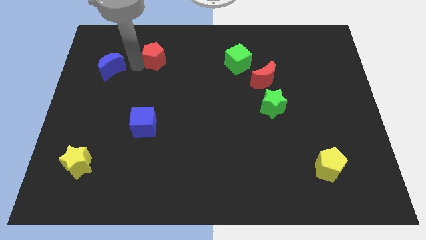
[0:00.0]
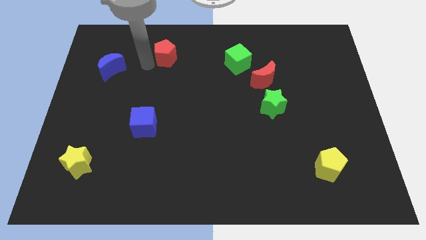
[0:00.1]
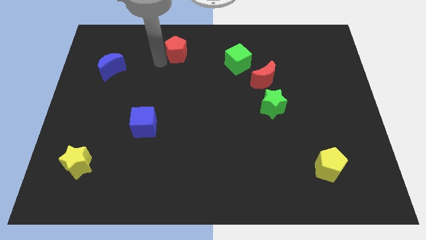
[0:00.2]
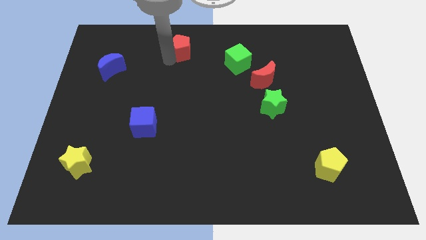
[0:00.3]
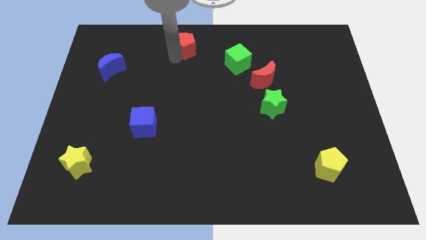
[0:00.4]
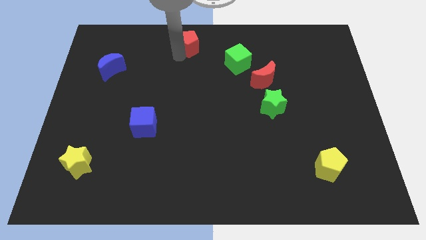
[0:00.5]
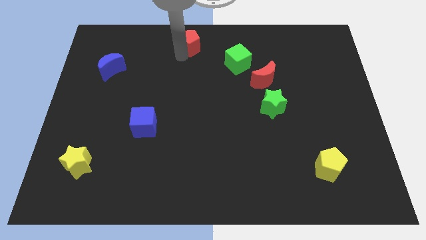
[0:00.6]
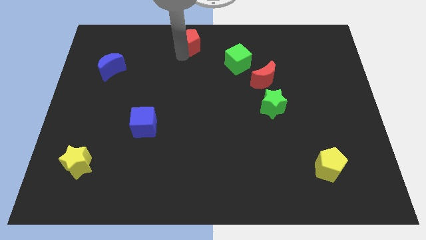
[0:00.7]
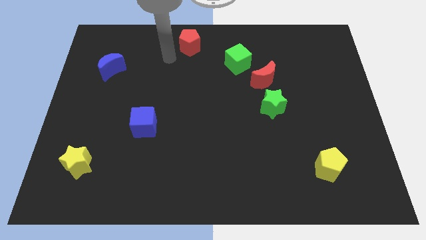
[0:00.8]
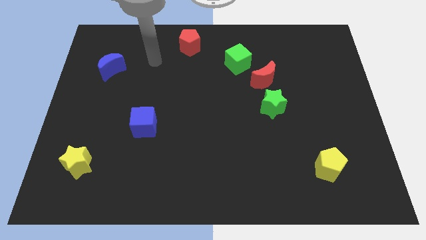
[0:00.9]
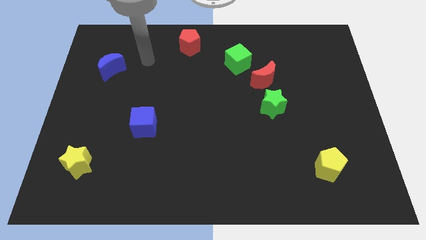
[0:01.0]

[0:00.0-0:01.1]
move the red pentagon to the top center

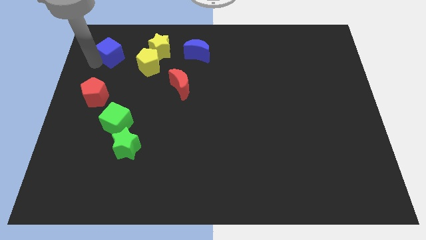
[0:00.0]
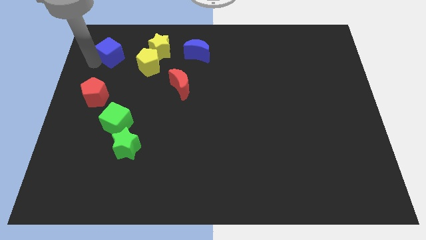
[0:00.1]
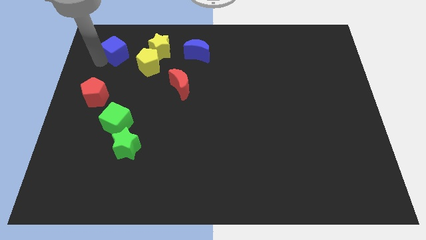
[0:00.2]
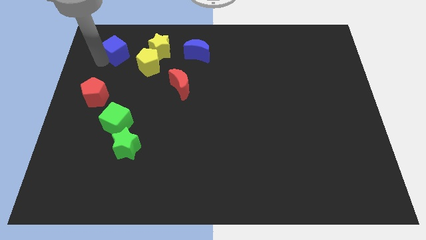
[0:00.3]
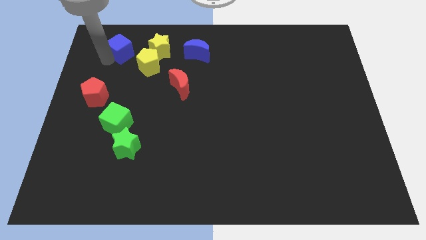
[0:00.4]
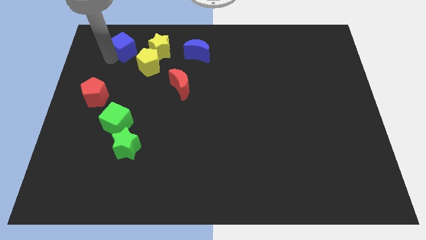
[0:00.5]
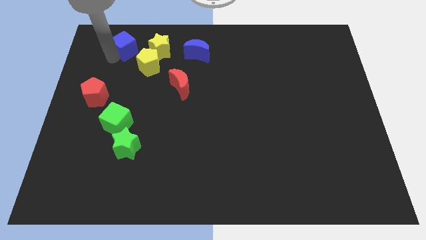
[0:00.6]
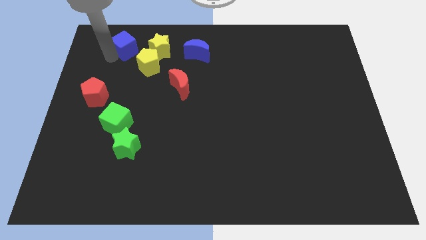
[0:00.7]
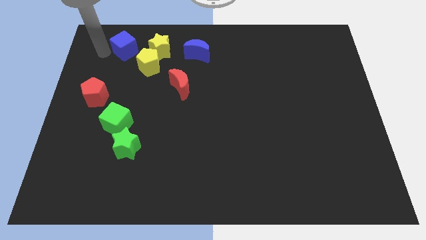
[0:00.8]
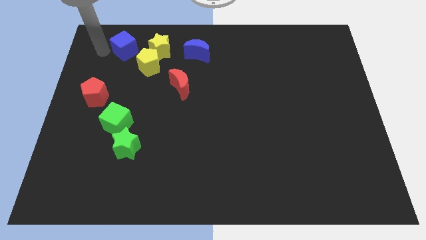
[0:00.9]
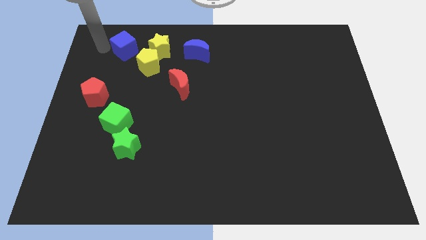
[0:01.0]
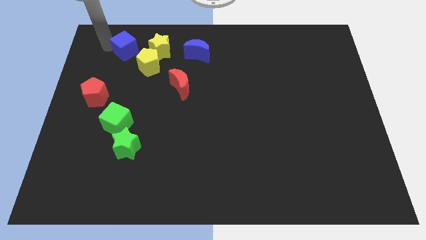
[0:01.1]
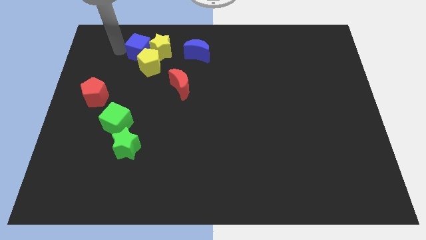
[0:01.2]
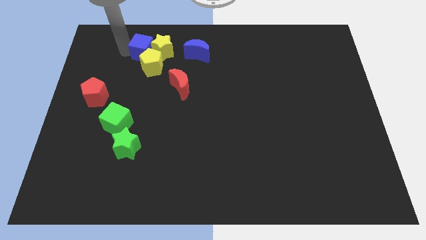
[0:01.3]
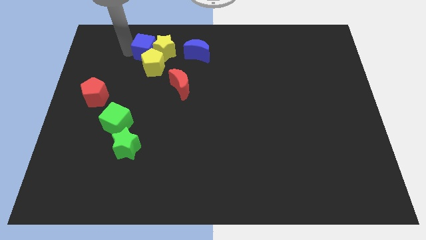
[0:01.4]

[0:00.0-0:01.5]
push the blue cube into the yellow blocks

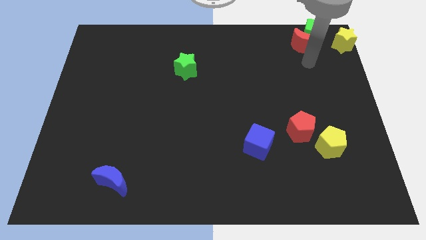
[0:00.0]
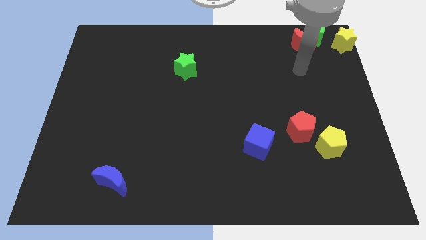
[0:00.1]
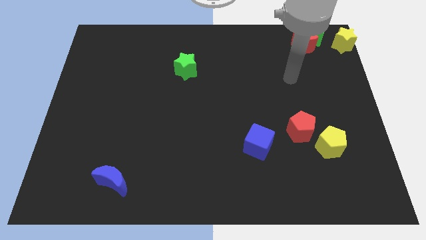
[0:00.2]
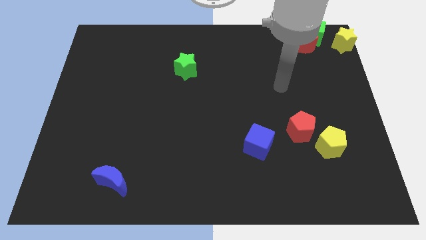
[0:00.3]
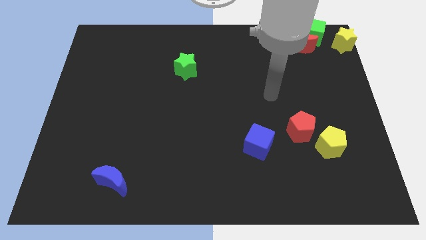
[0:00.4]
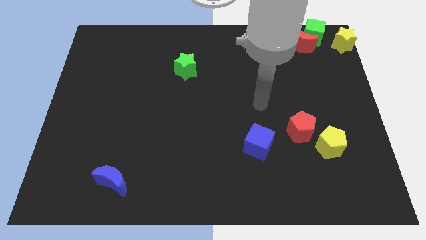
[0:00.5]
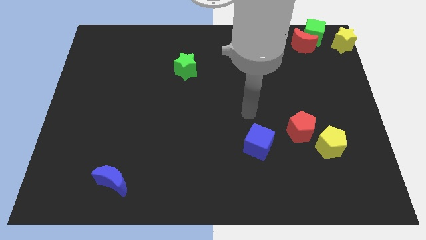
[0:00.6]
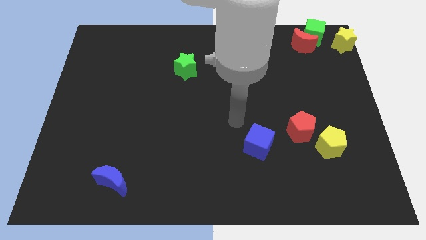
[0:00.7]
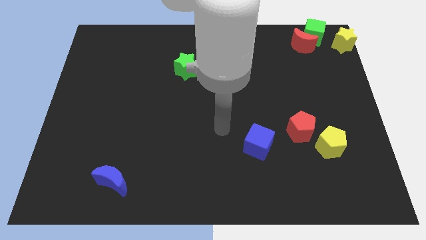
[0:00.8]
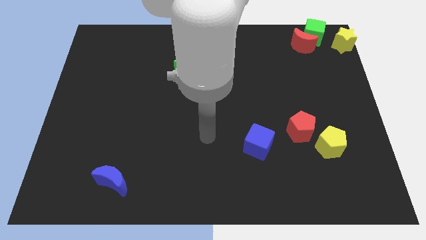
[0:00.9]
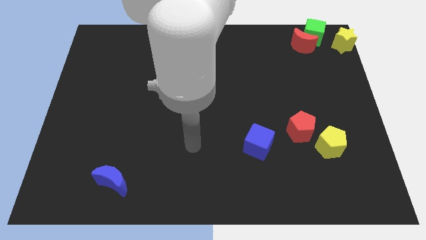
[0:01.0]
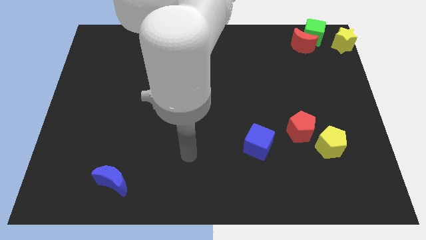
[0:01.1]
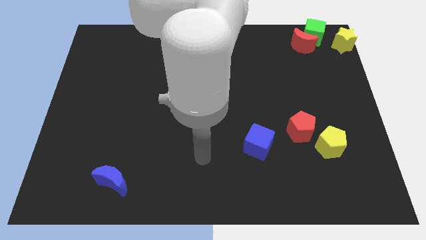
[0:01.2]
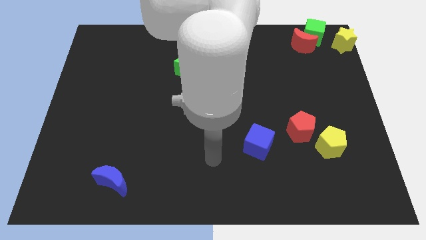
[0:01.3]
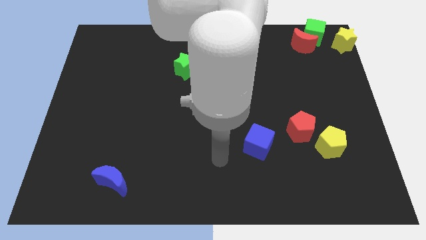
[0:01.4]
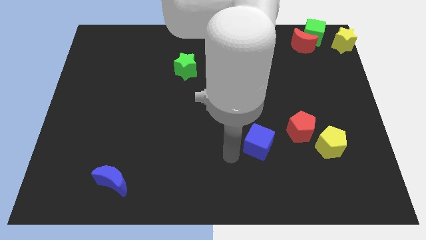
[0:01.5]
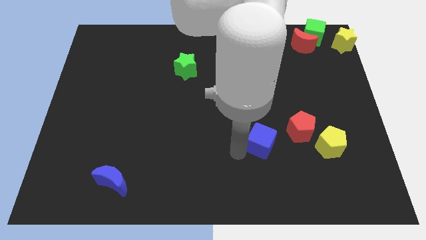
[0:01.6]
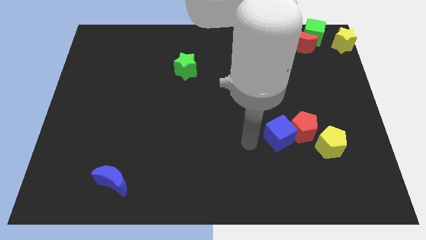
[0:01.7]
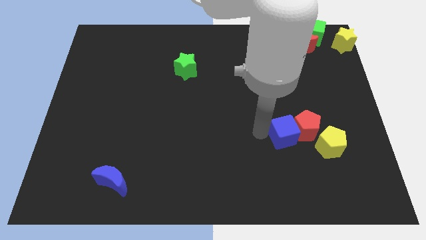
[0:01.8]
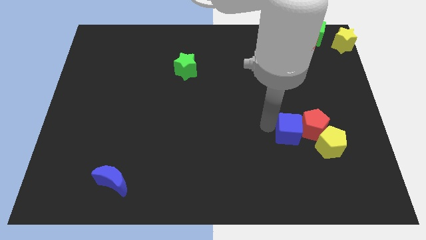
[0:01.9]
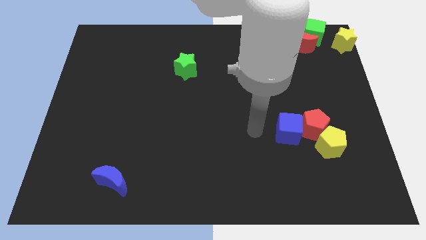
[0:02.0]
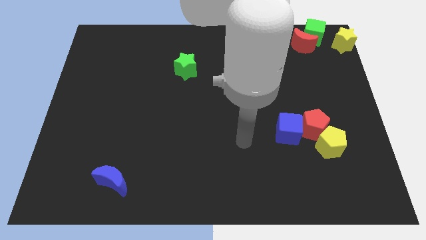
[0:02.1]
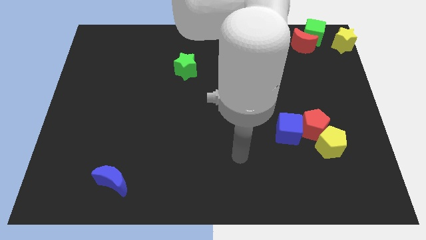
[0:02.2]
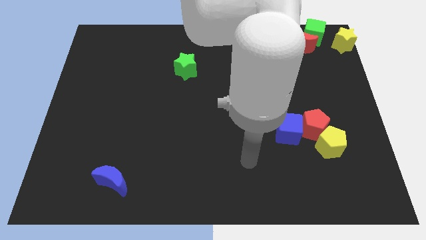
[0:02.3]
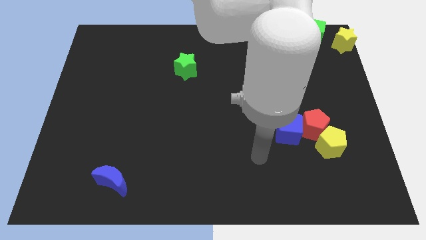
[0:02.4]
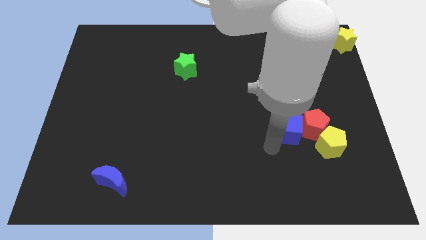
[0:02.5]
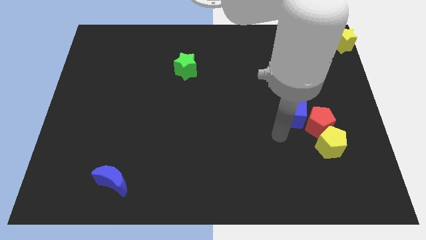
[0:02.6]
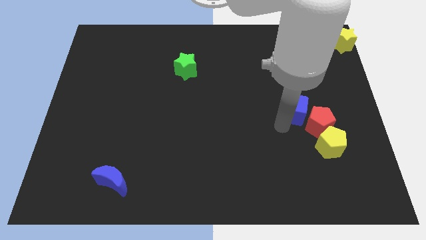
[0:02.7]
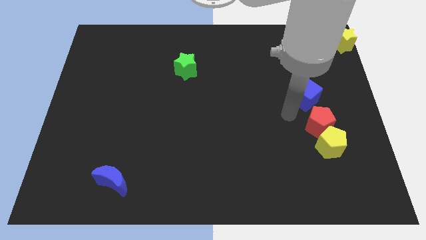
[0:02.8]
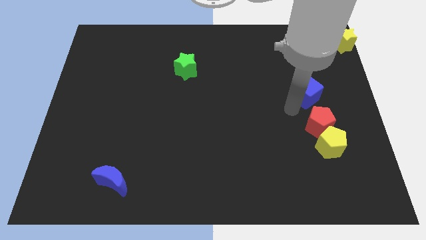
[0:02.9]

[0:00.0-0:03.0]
push the blue cube into the red pentagon

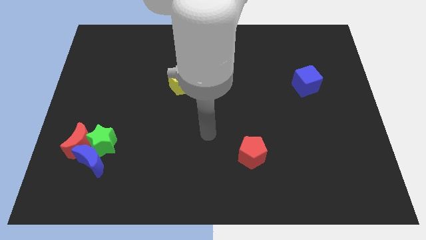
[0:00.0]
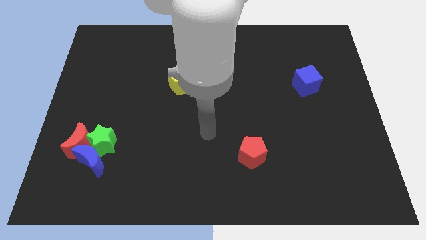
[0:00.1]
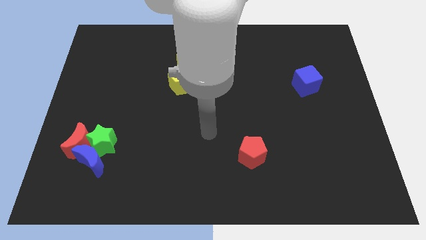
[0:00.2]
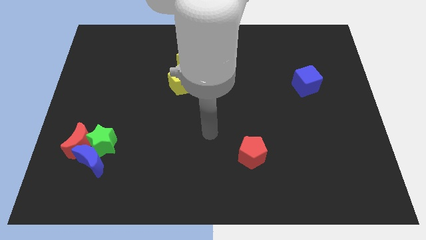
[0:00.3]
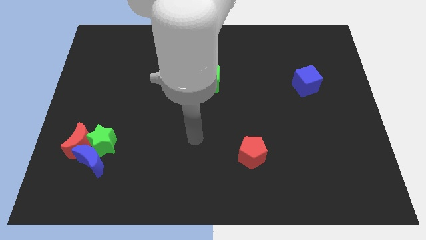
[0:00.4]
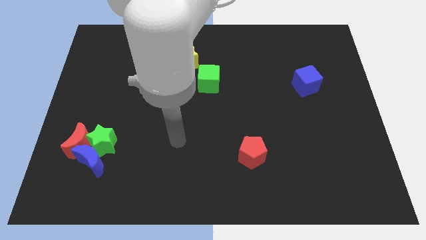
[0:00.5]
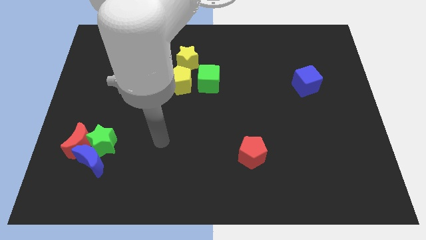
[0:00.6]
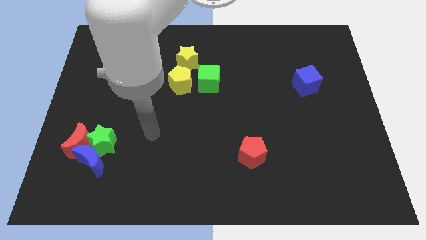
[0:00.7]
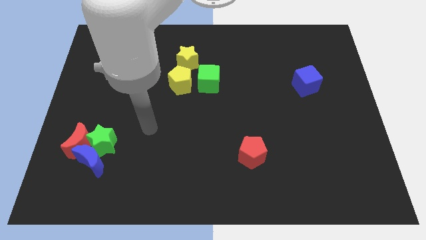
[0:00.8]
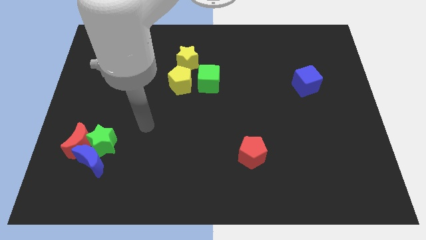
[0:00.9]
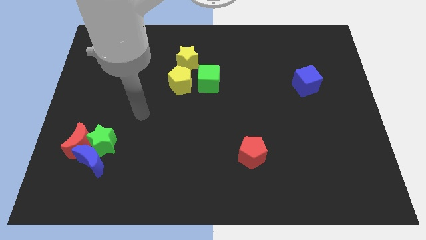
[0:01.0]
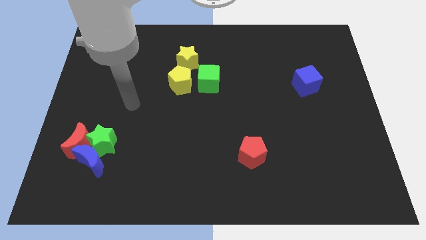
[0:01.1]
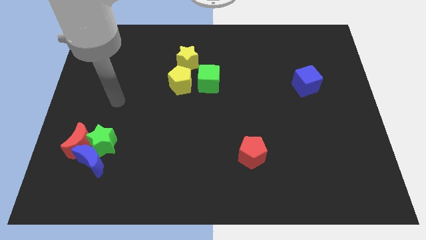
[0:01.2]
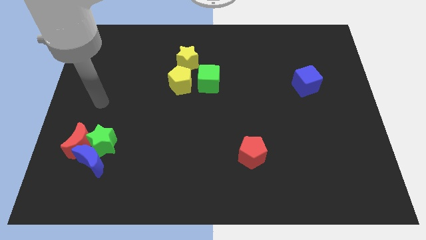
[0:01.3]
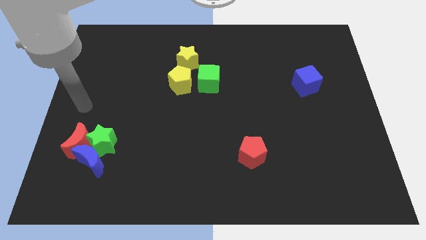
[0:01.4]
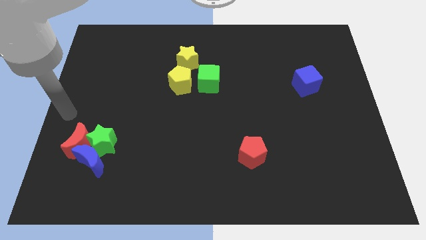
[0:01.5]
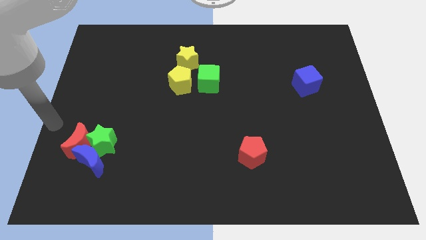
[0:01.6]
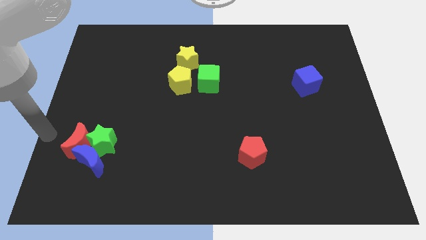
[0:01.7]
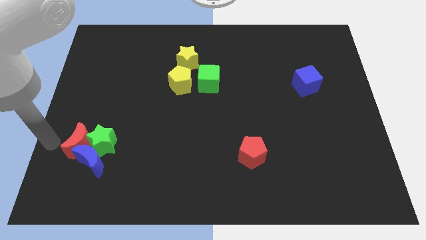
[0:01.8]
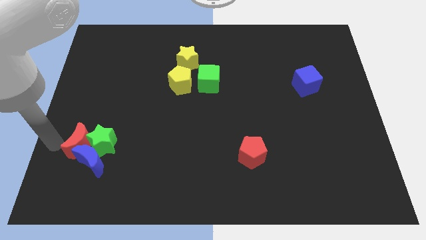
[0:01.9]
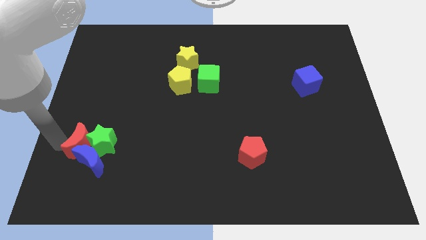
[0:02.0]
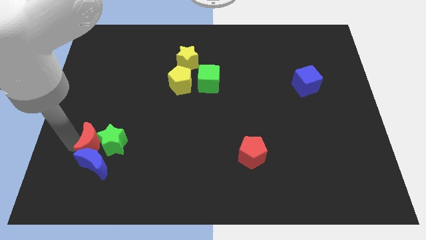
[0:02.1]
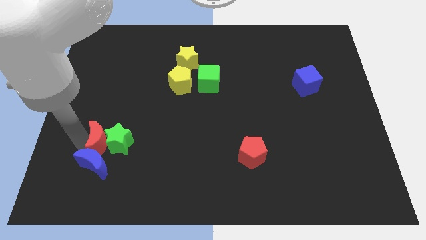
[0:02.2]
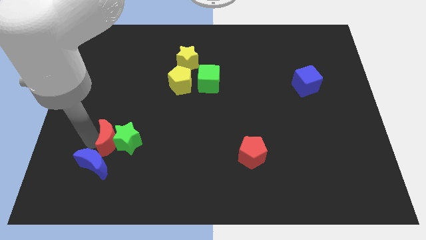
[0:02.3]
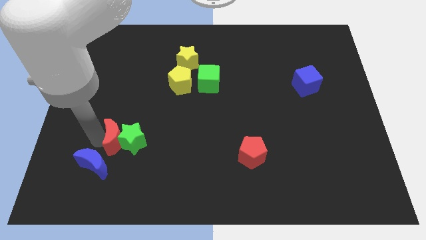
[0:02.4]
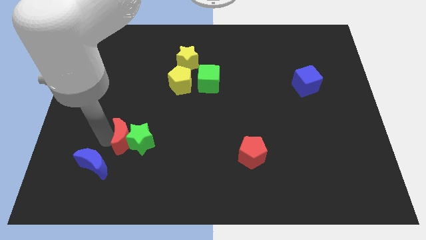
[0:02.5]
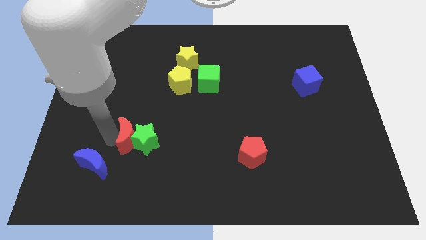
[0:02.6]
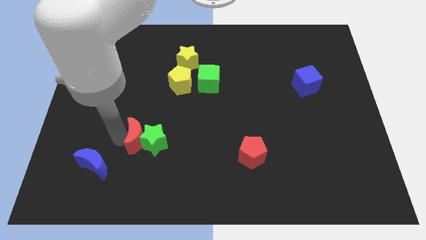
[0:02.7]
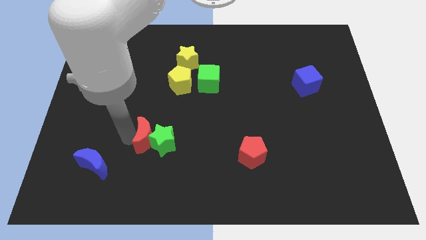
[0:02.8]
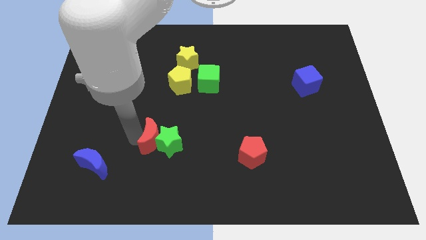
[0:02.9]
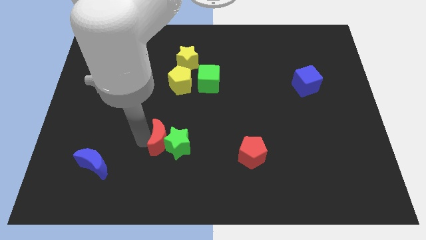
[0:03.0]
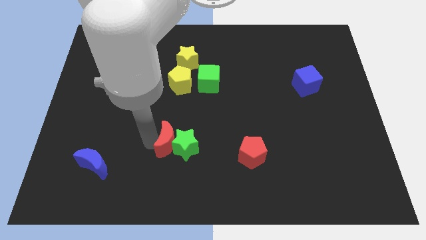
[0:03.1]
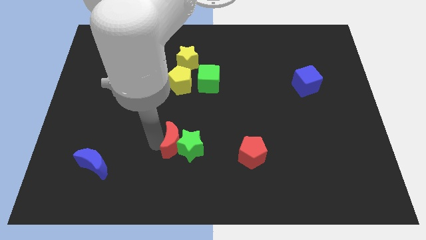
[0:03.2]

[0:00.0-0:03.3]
place the red moon and green star together vertically below the yellow pentagon

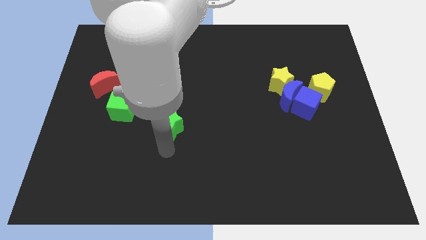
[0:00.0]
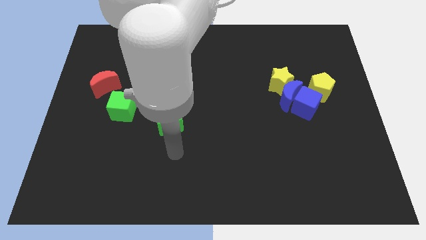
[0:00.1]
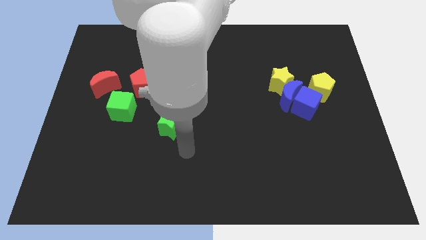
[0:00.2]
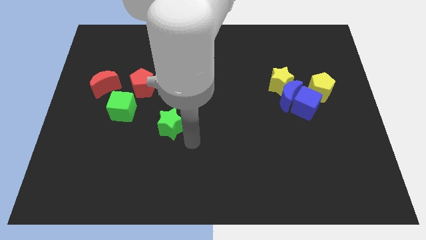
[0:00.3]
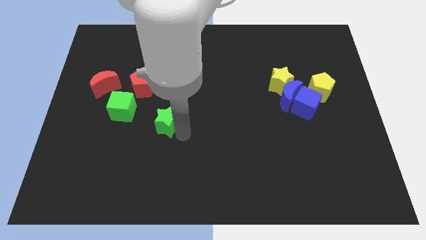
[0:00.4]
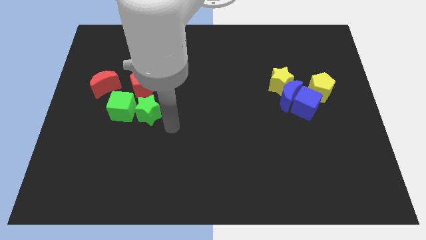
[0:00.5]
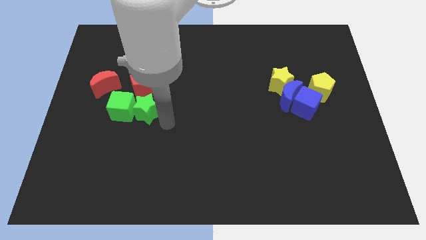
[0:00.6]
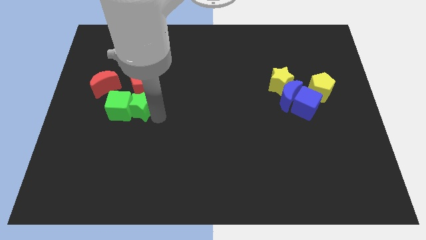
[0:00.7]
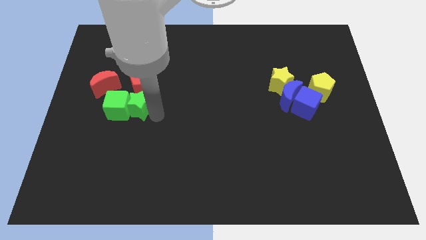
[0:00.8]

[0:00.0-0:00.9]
place the green star right to the green cube
